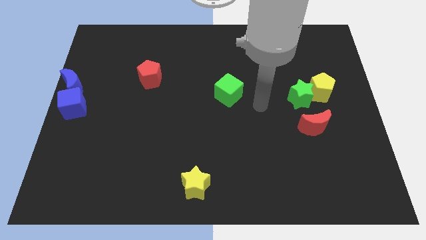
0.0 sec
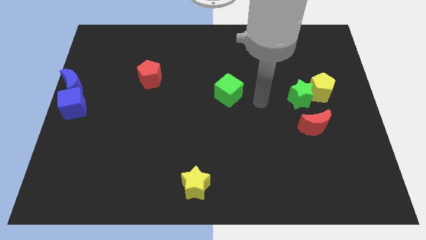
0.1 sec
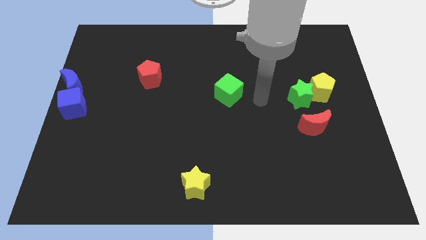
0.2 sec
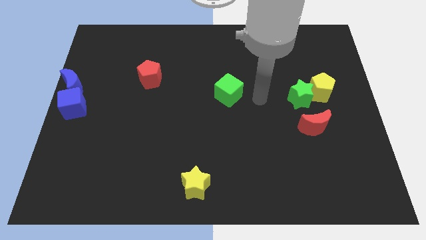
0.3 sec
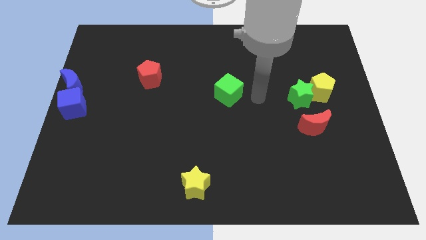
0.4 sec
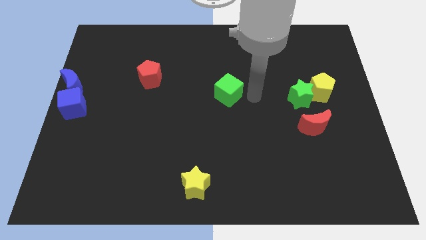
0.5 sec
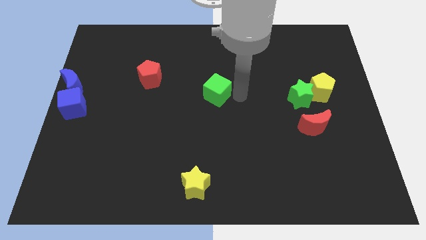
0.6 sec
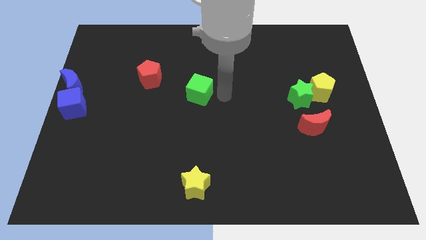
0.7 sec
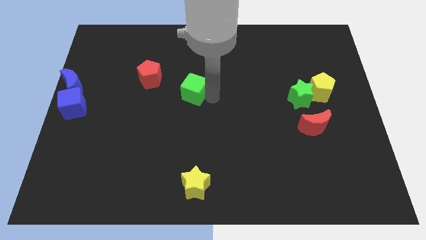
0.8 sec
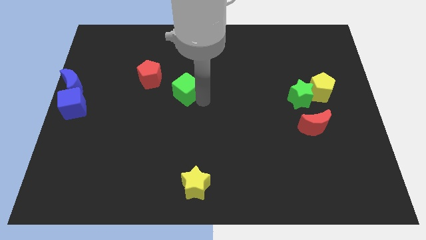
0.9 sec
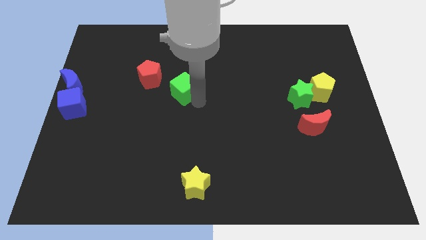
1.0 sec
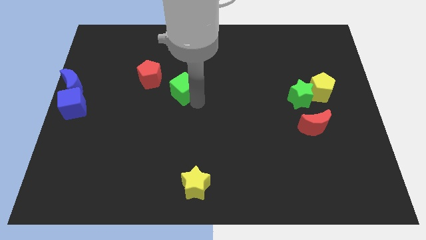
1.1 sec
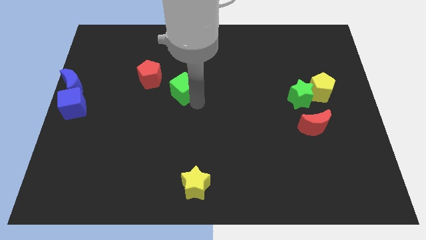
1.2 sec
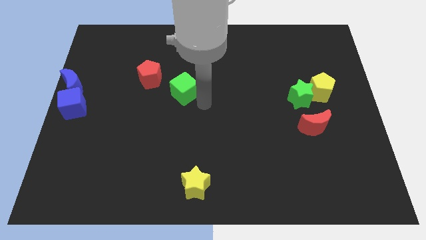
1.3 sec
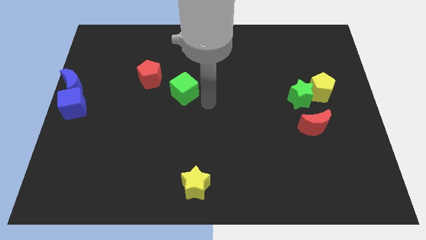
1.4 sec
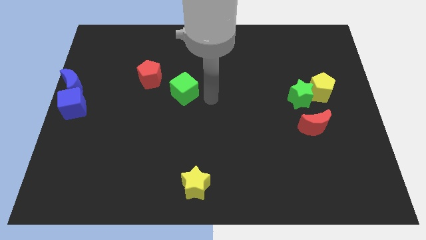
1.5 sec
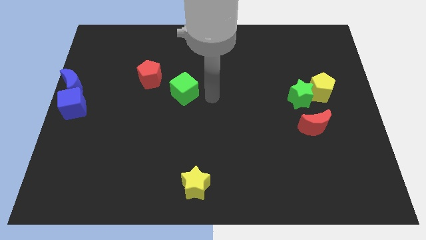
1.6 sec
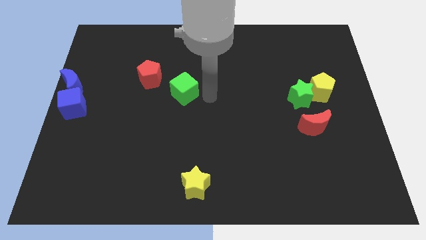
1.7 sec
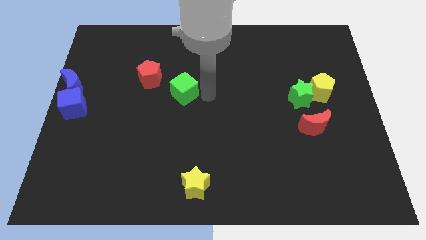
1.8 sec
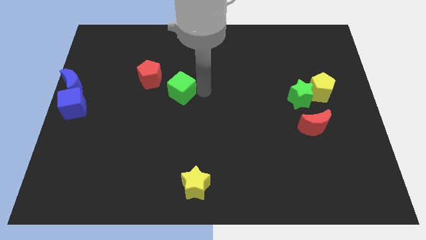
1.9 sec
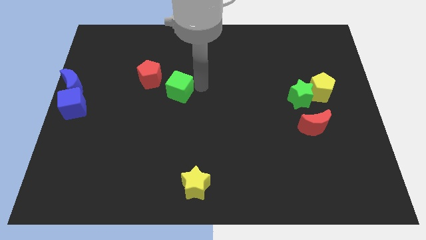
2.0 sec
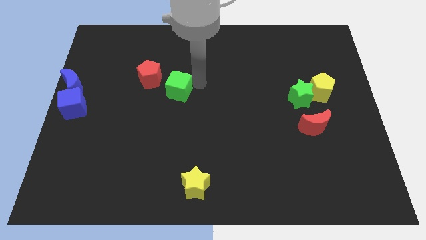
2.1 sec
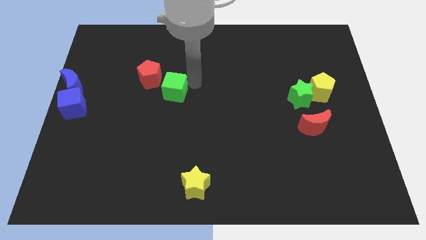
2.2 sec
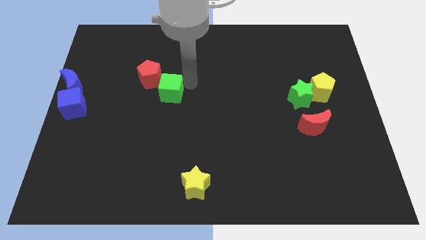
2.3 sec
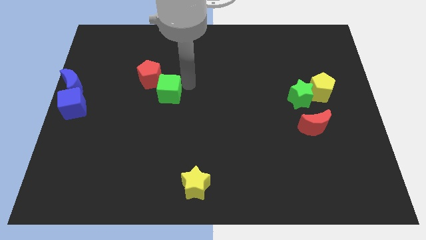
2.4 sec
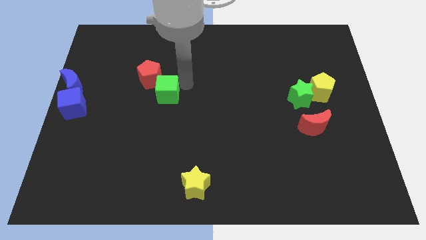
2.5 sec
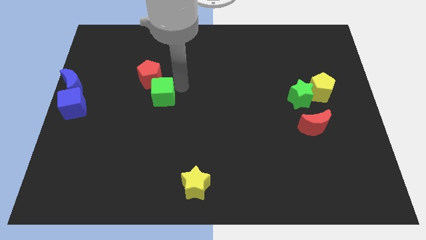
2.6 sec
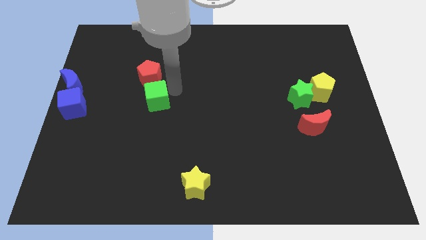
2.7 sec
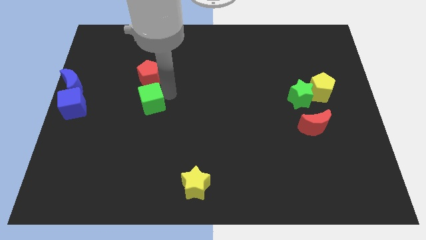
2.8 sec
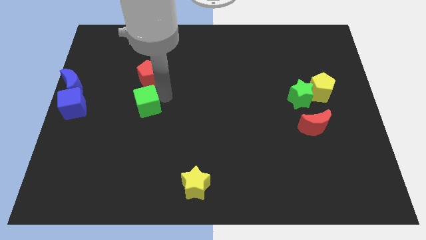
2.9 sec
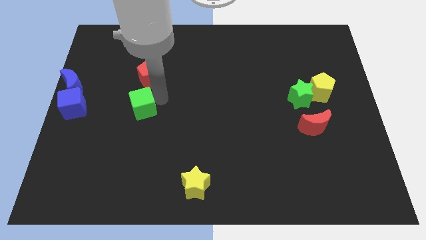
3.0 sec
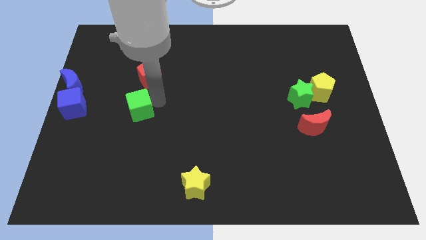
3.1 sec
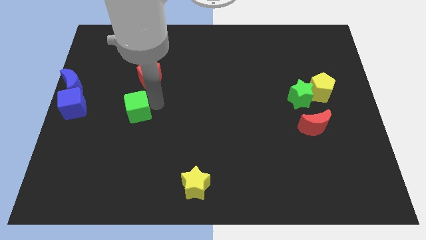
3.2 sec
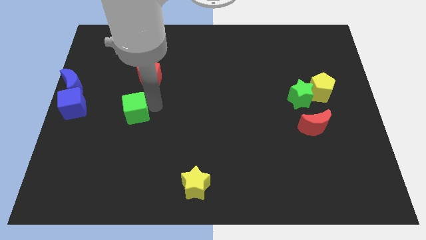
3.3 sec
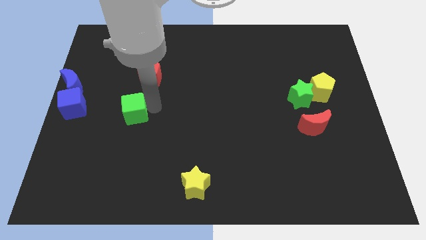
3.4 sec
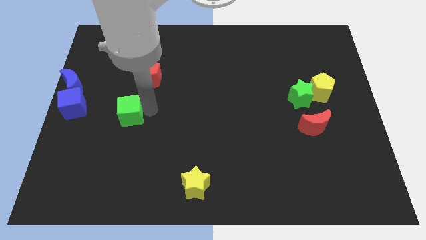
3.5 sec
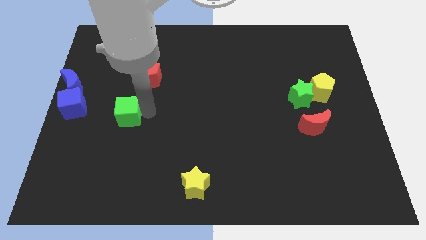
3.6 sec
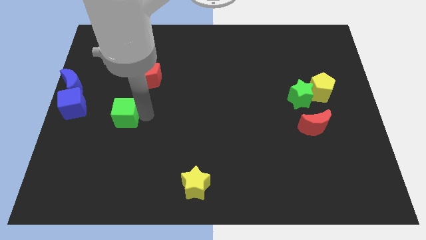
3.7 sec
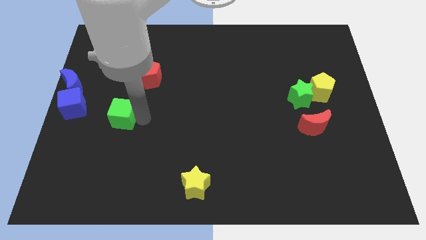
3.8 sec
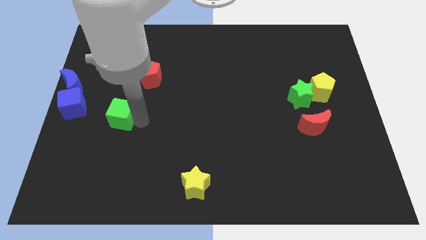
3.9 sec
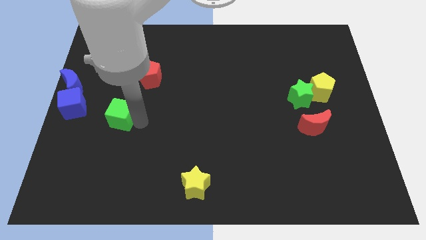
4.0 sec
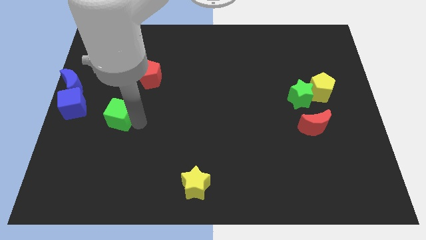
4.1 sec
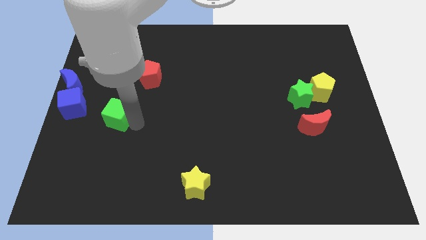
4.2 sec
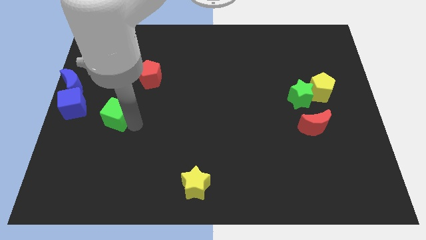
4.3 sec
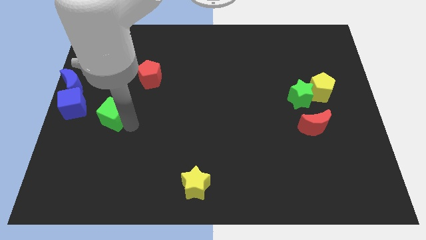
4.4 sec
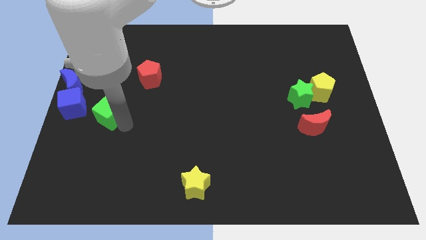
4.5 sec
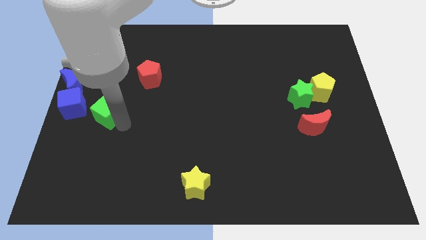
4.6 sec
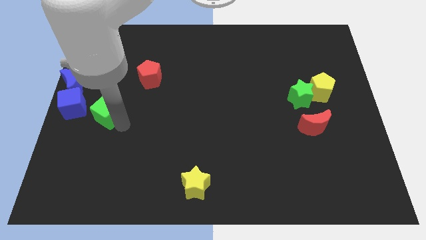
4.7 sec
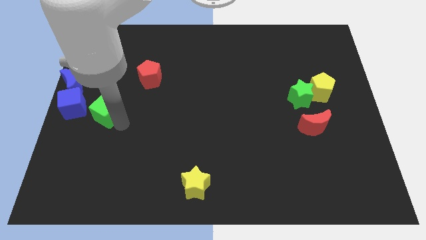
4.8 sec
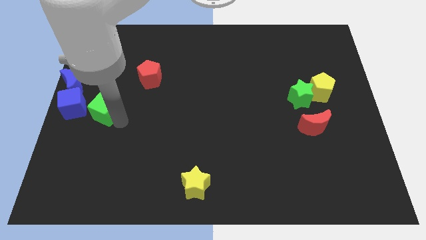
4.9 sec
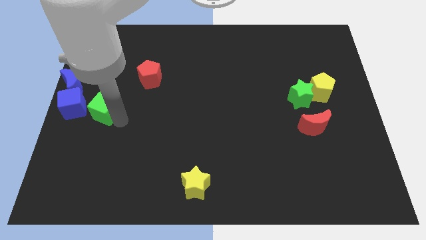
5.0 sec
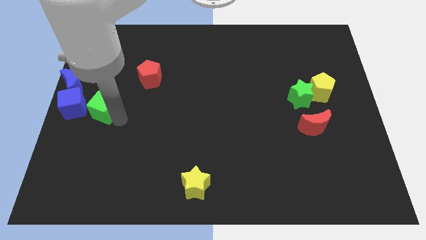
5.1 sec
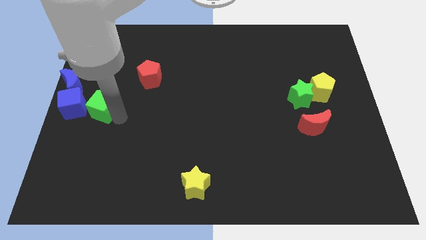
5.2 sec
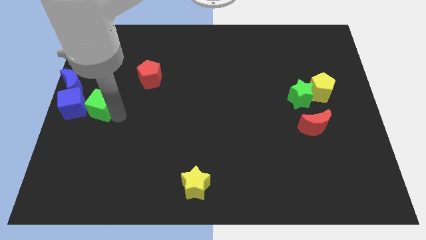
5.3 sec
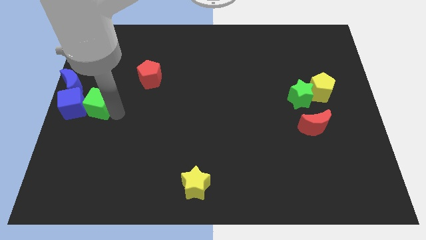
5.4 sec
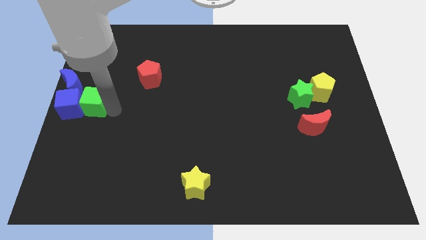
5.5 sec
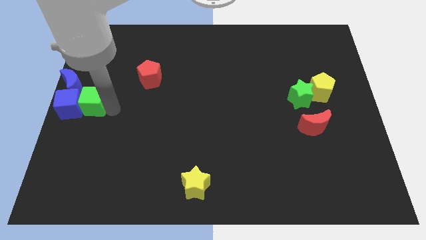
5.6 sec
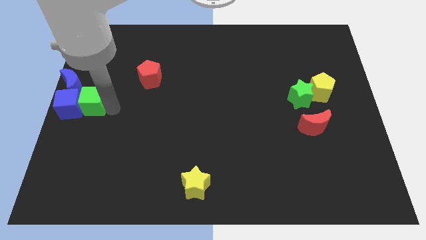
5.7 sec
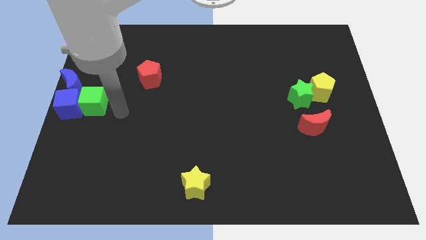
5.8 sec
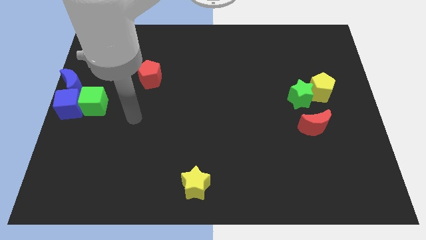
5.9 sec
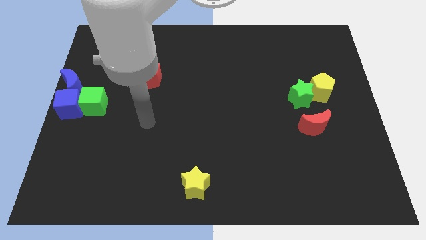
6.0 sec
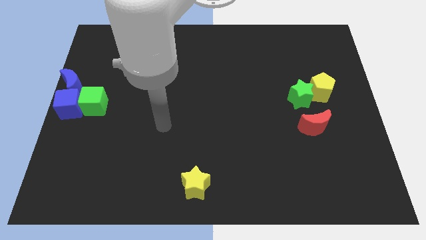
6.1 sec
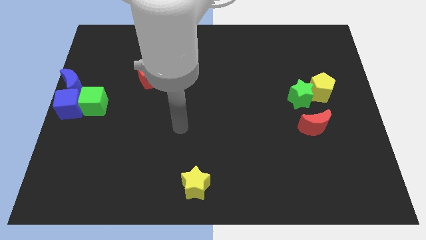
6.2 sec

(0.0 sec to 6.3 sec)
push the green cube right to blue cube

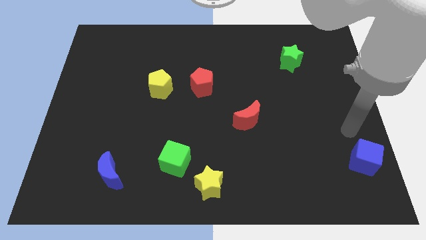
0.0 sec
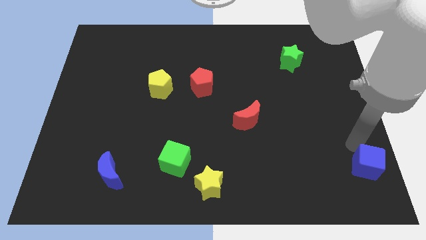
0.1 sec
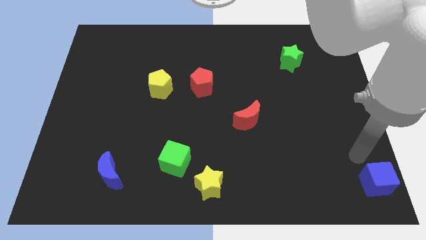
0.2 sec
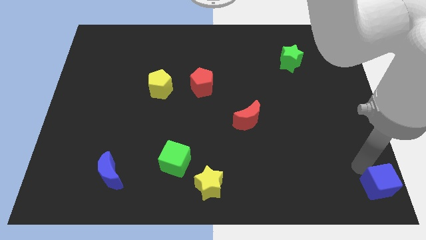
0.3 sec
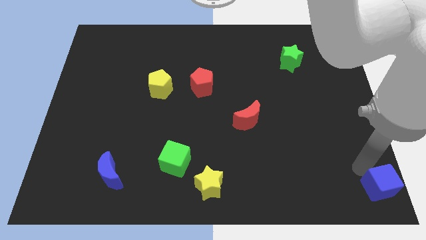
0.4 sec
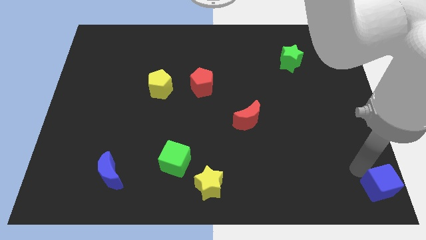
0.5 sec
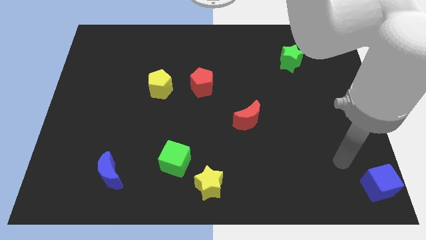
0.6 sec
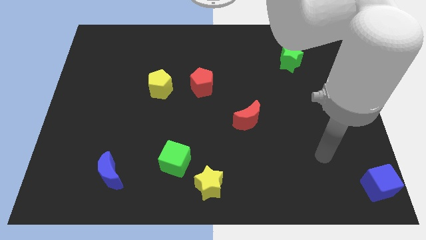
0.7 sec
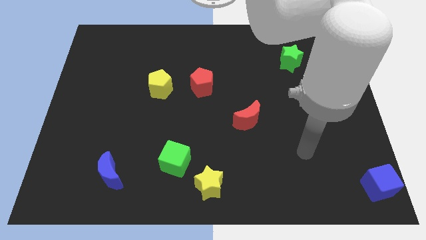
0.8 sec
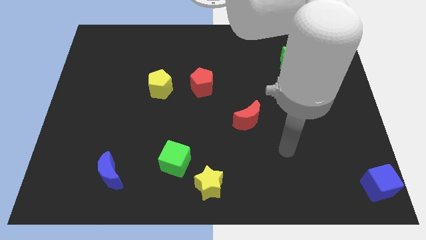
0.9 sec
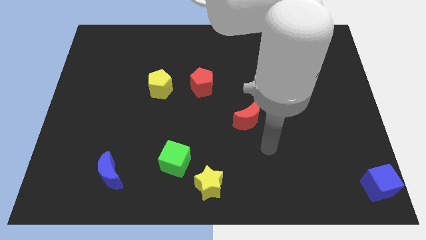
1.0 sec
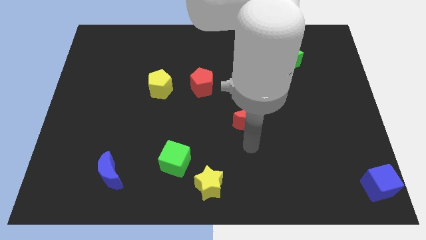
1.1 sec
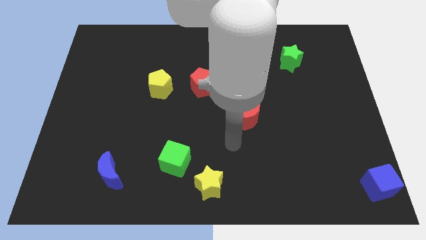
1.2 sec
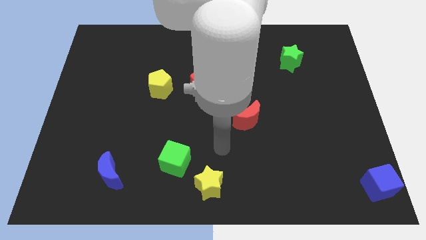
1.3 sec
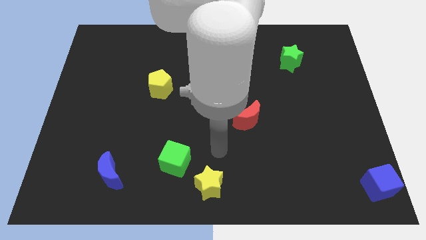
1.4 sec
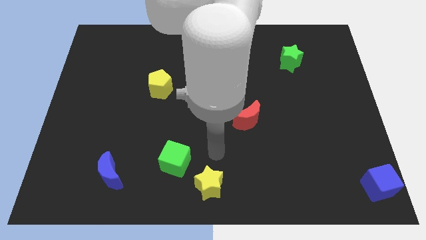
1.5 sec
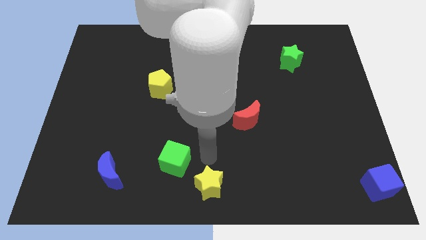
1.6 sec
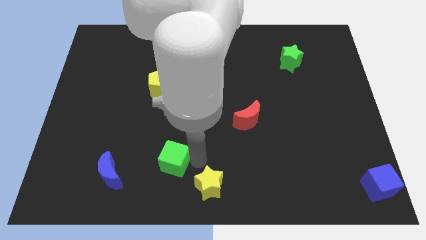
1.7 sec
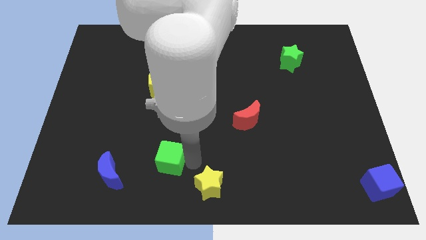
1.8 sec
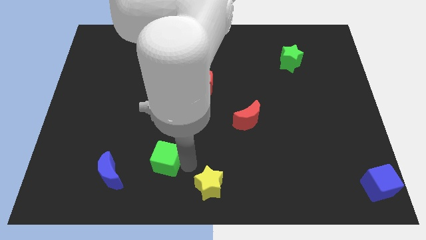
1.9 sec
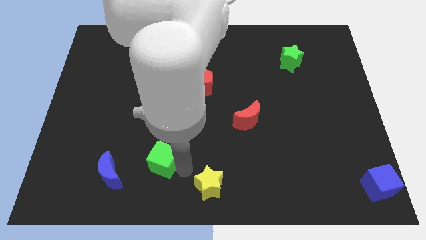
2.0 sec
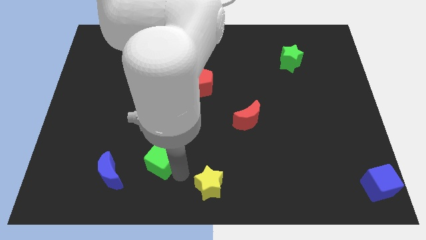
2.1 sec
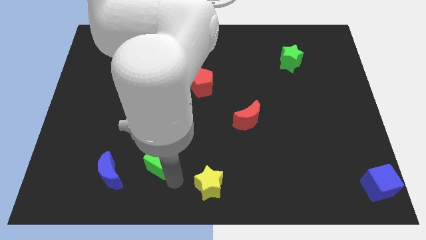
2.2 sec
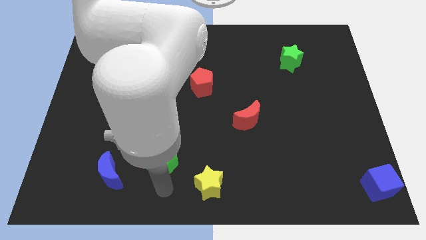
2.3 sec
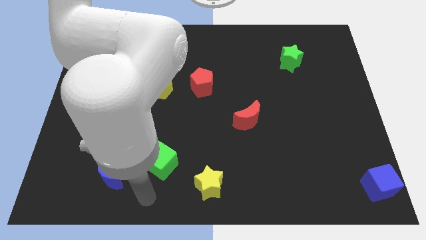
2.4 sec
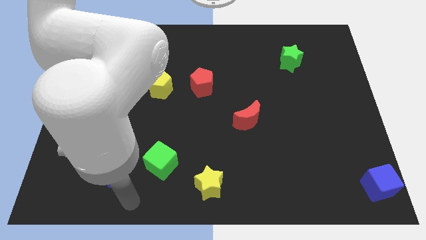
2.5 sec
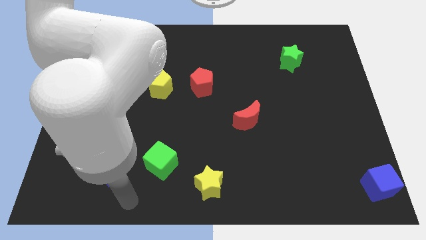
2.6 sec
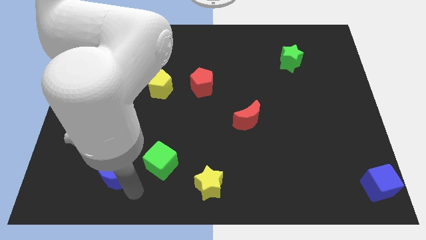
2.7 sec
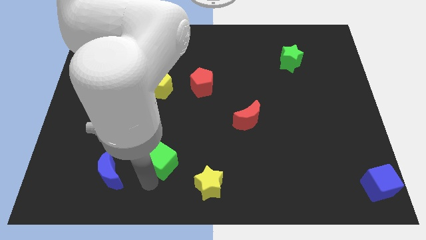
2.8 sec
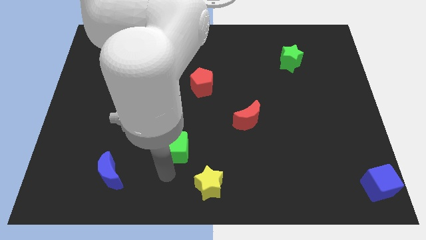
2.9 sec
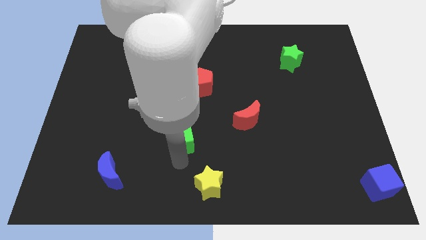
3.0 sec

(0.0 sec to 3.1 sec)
move your arm away from the blue cube
